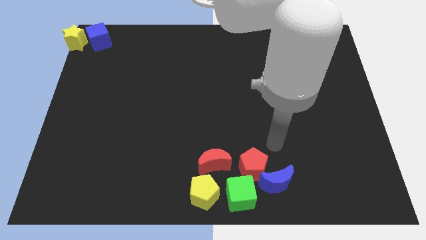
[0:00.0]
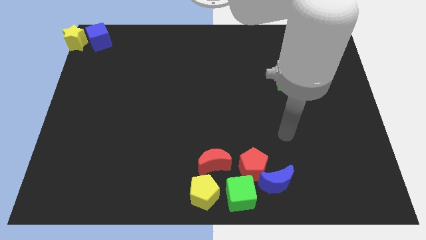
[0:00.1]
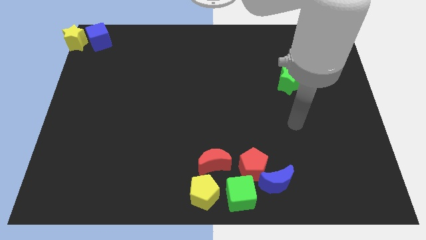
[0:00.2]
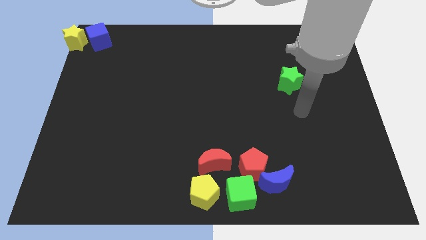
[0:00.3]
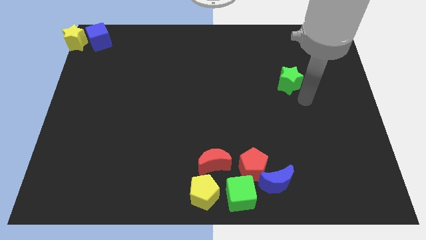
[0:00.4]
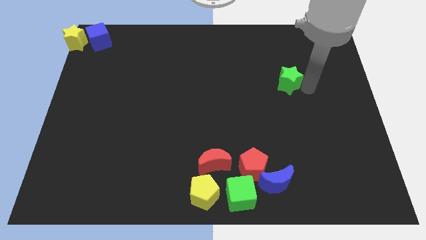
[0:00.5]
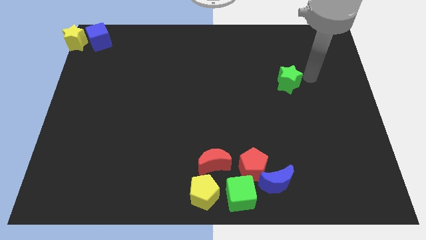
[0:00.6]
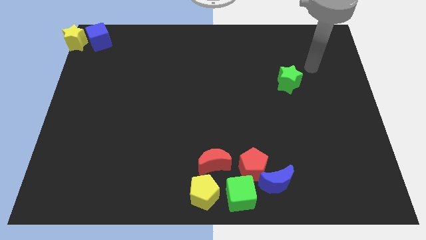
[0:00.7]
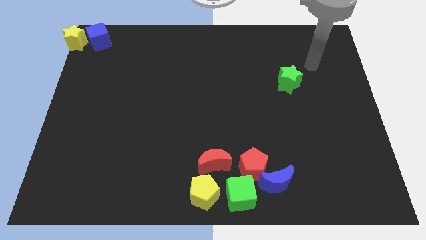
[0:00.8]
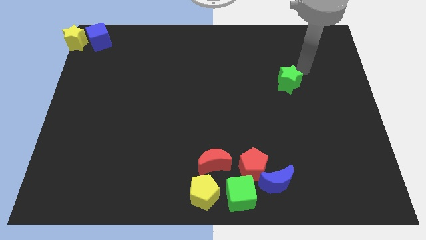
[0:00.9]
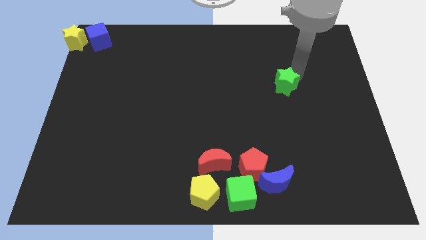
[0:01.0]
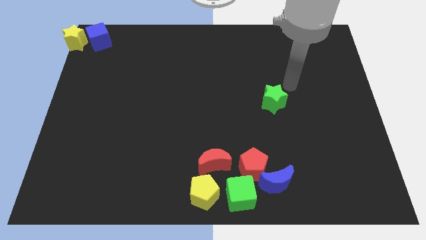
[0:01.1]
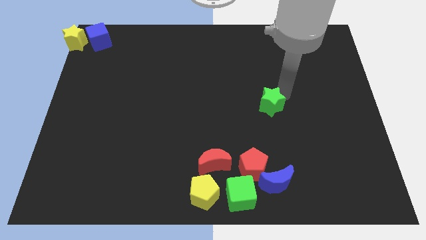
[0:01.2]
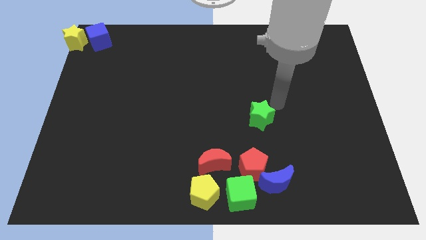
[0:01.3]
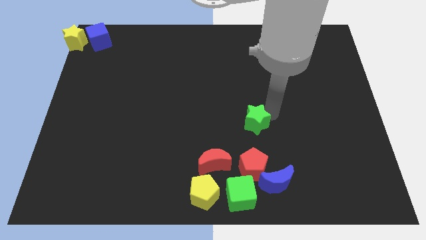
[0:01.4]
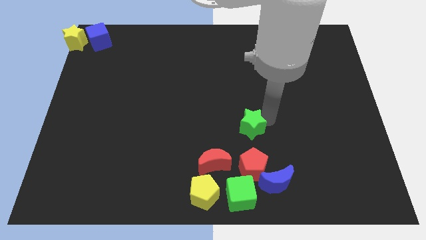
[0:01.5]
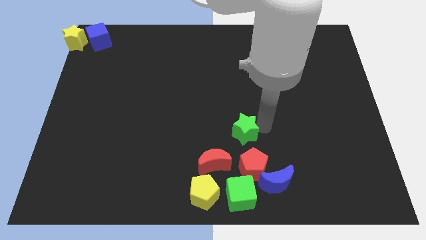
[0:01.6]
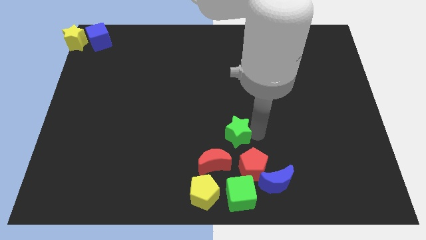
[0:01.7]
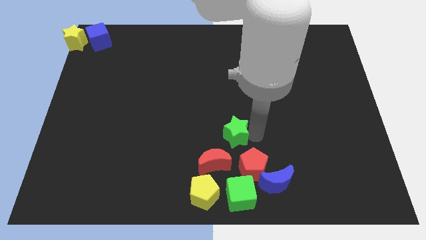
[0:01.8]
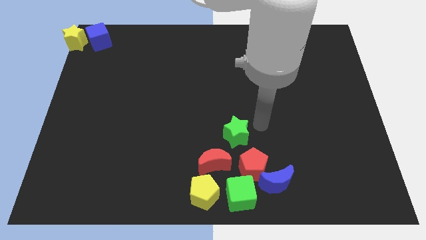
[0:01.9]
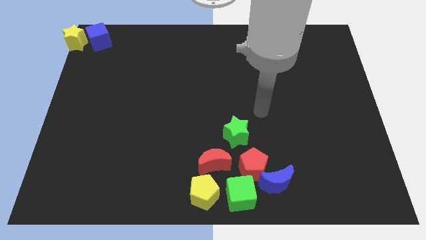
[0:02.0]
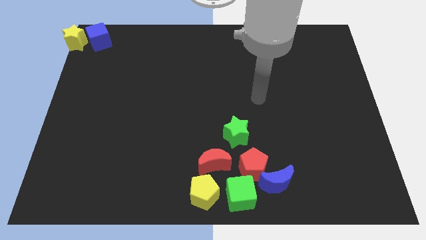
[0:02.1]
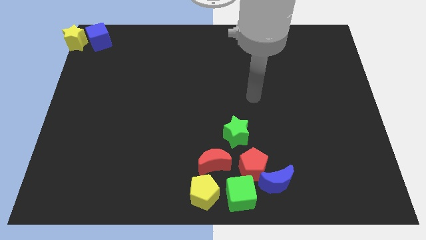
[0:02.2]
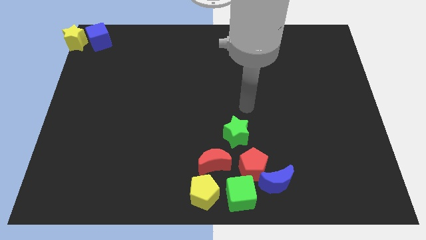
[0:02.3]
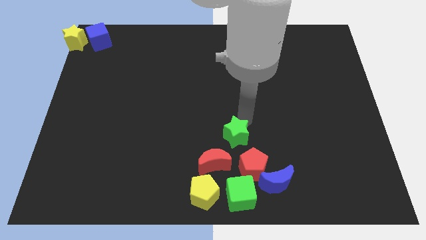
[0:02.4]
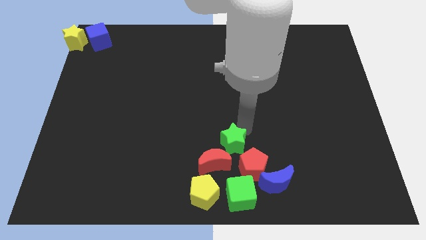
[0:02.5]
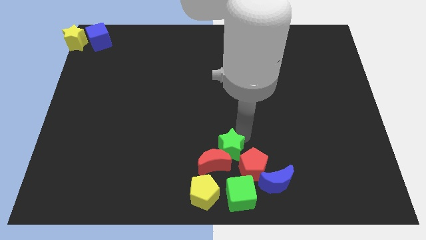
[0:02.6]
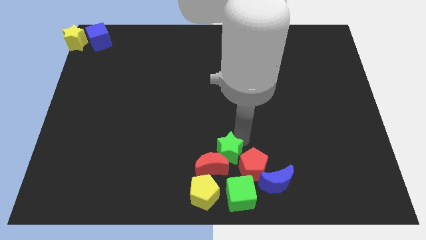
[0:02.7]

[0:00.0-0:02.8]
put the green star to the top right corner of the red crescent

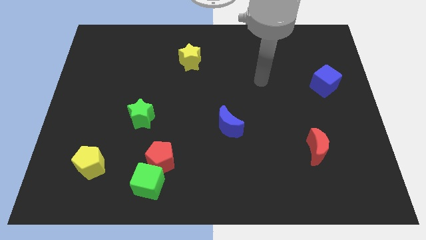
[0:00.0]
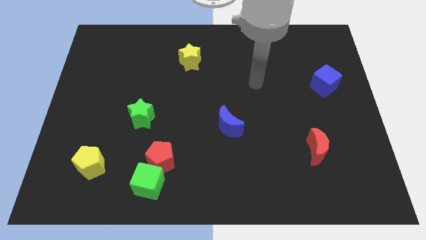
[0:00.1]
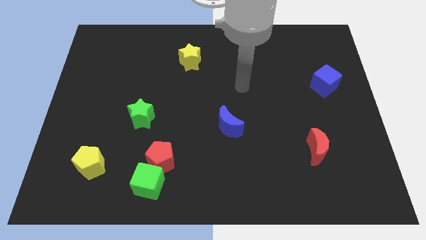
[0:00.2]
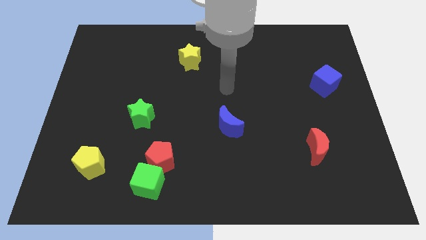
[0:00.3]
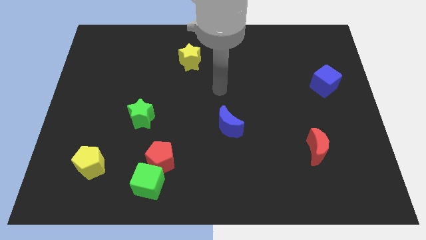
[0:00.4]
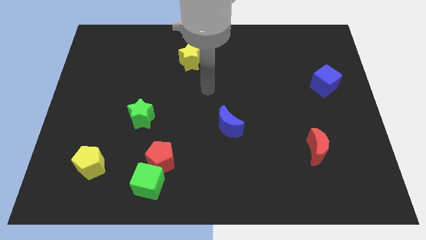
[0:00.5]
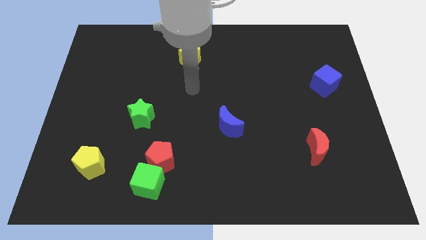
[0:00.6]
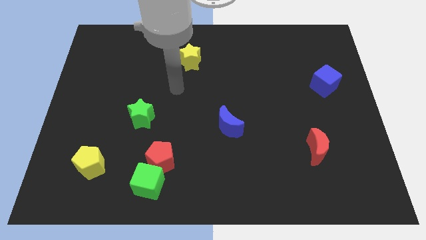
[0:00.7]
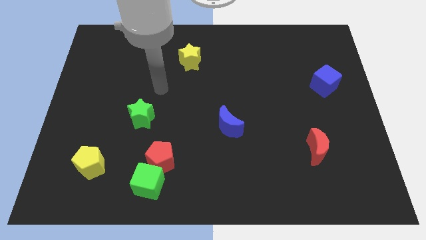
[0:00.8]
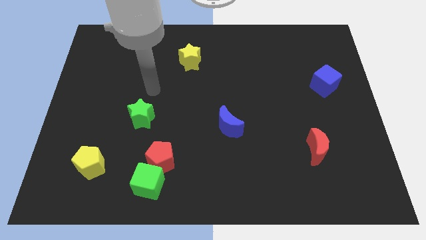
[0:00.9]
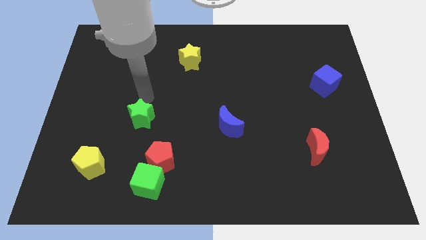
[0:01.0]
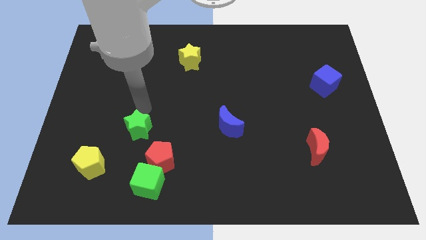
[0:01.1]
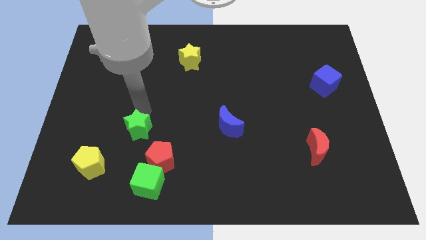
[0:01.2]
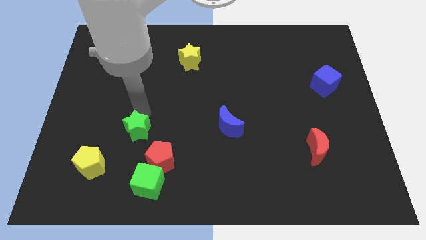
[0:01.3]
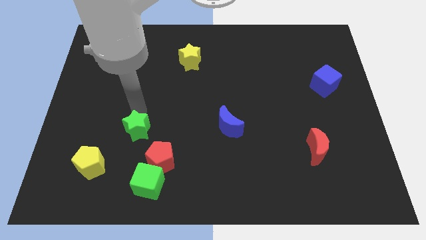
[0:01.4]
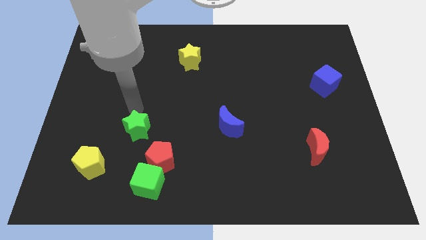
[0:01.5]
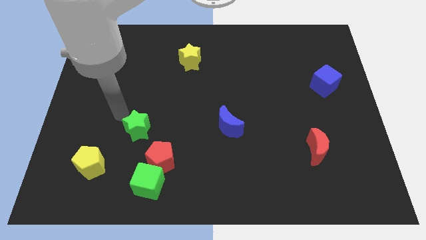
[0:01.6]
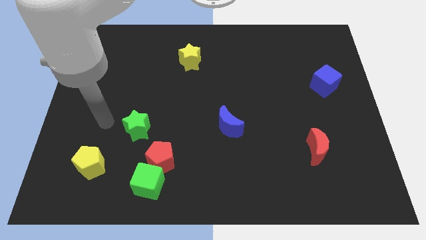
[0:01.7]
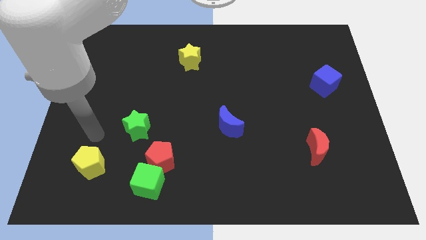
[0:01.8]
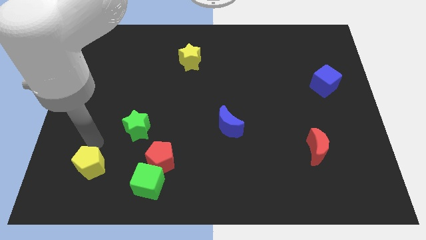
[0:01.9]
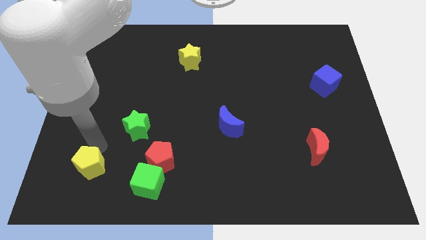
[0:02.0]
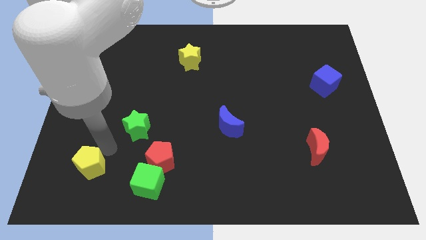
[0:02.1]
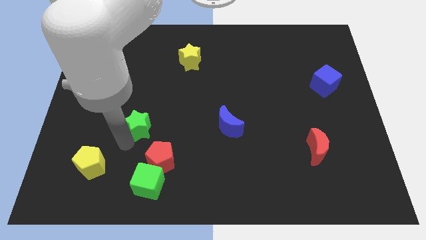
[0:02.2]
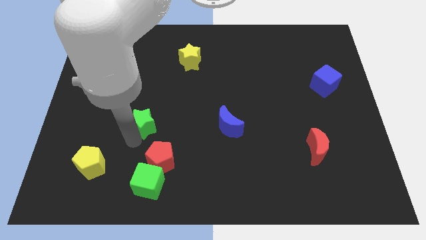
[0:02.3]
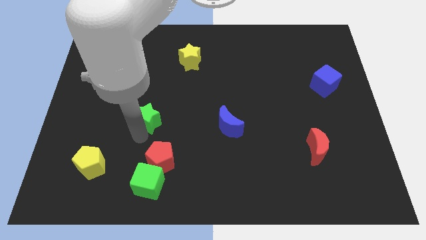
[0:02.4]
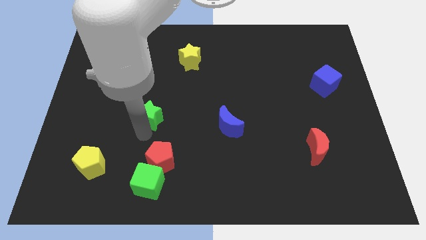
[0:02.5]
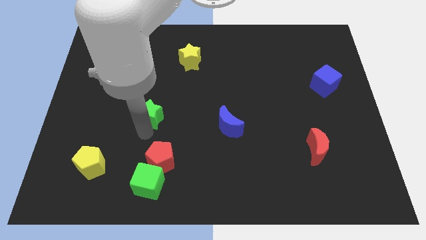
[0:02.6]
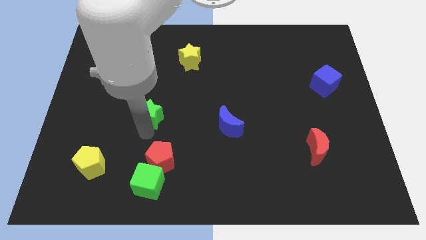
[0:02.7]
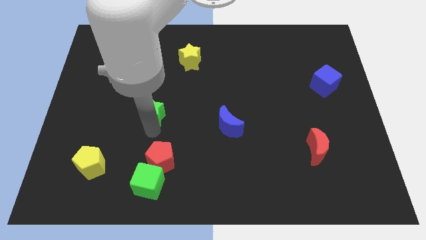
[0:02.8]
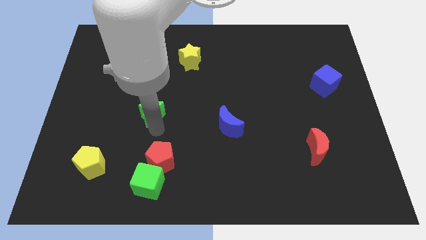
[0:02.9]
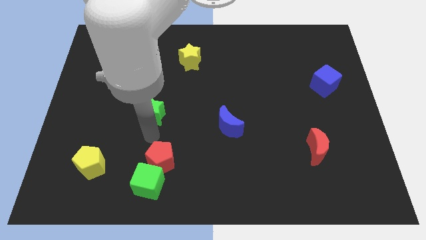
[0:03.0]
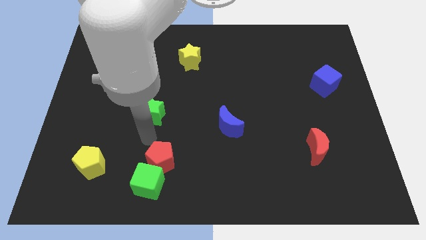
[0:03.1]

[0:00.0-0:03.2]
move green star slightly up

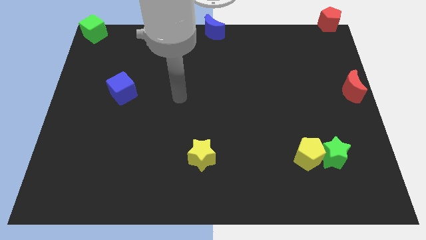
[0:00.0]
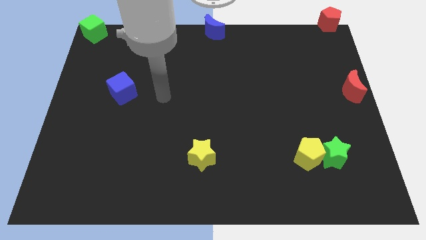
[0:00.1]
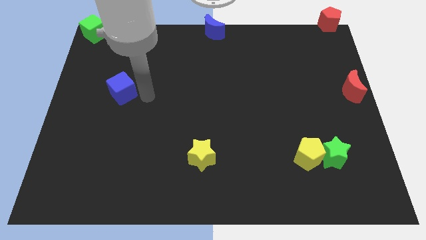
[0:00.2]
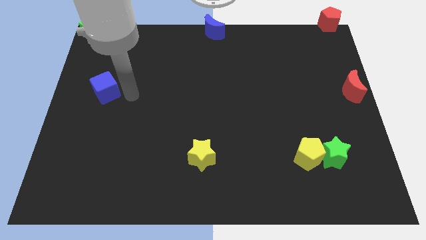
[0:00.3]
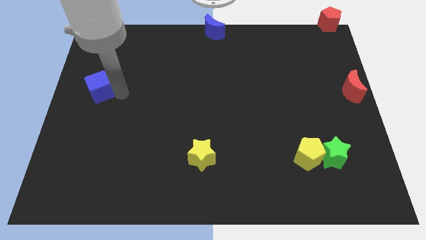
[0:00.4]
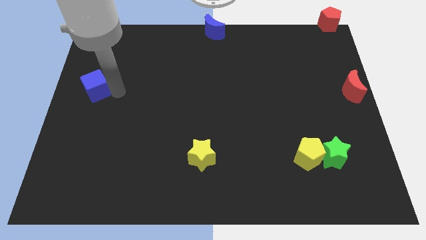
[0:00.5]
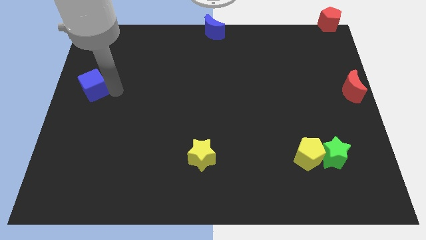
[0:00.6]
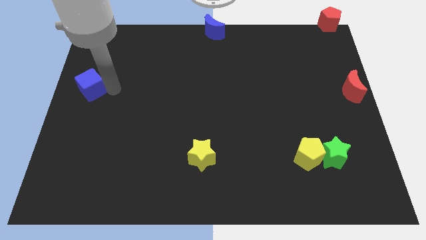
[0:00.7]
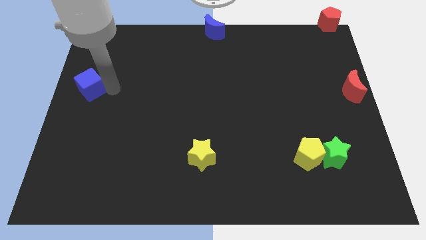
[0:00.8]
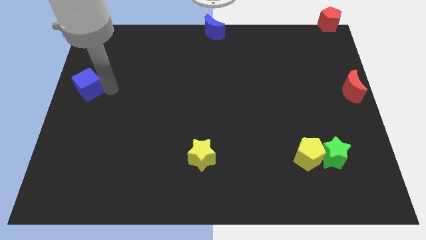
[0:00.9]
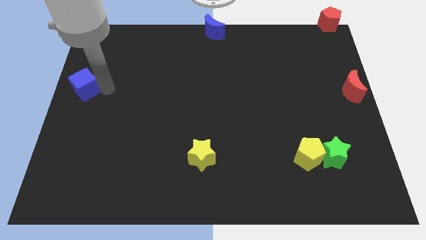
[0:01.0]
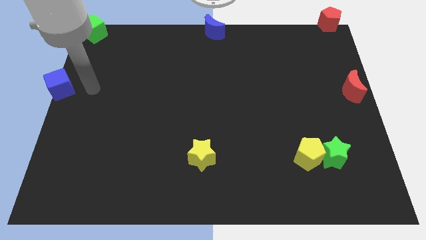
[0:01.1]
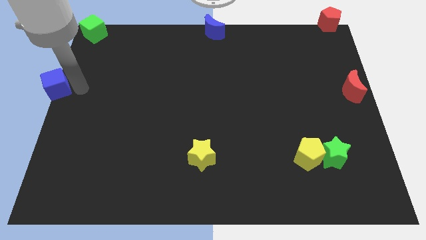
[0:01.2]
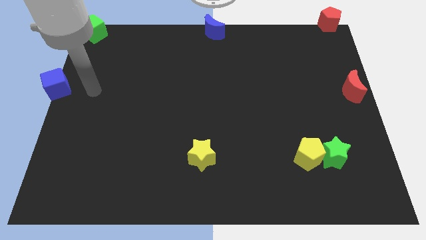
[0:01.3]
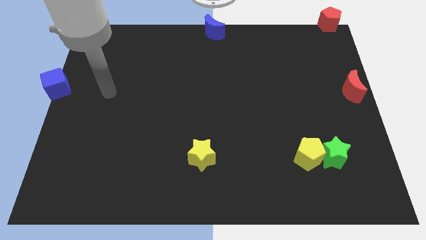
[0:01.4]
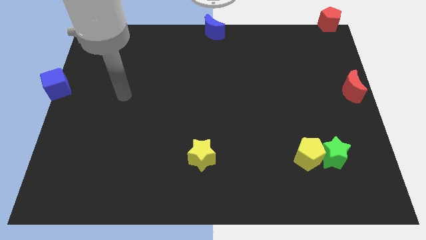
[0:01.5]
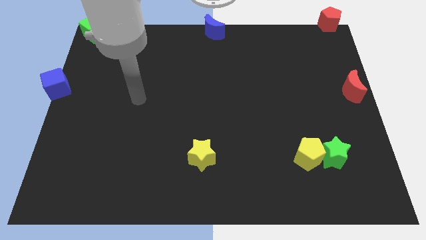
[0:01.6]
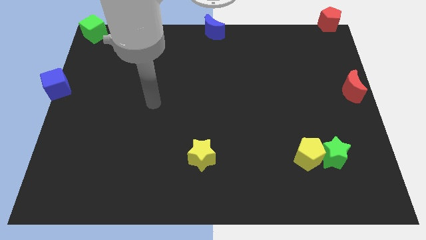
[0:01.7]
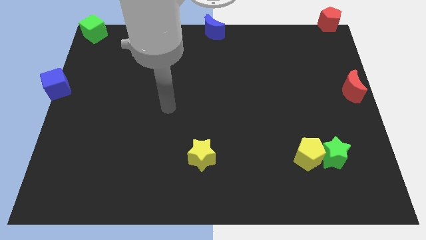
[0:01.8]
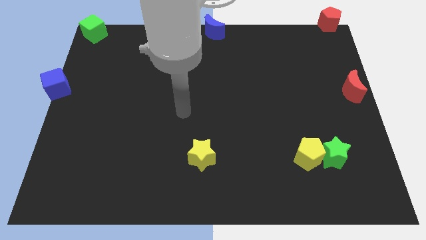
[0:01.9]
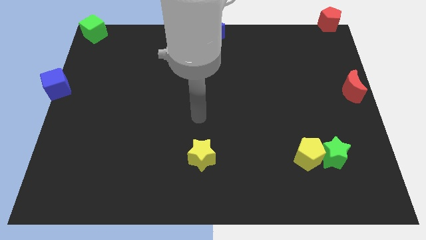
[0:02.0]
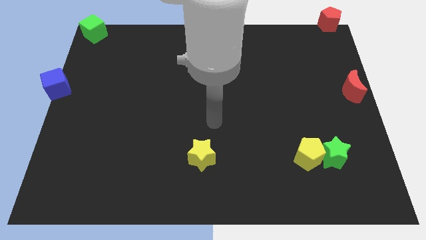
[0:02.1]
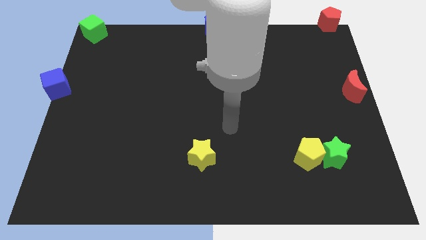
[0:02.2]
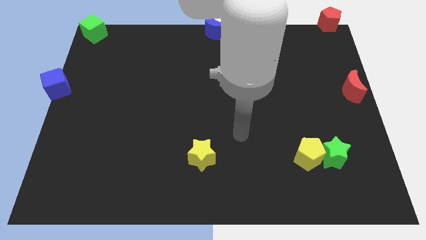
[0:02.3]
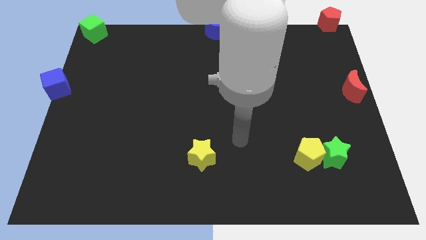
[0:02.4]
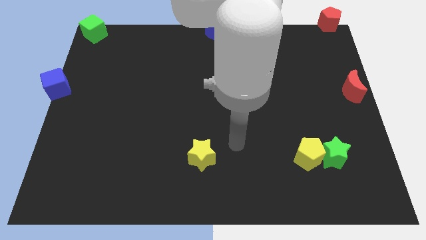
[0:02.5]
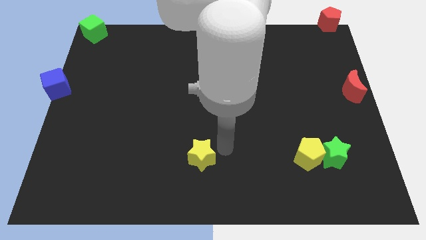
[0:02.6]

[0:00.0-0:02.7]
slide the blue cube to the center left

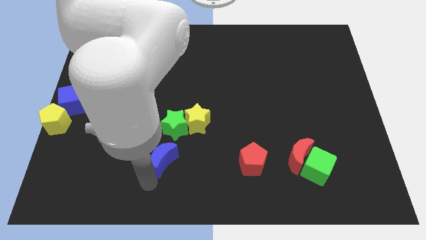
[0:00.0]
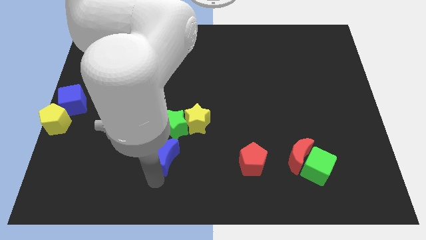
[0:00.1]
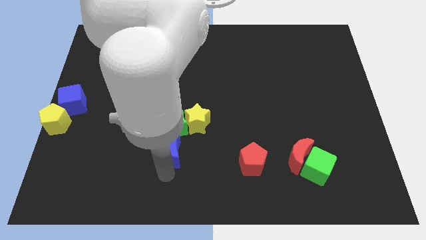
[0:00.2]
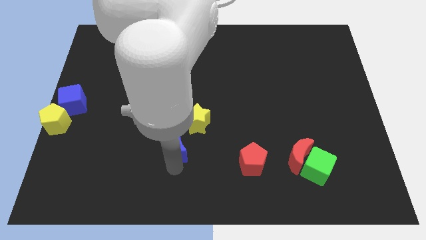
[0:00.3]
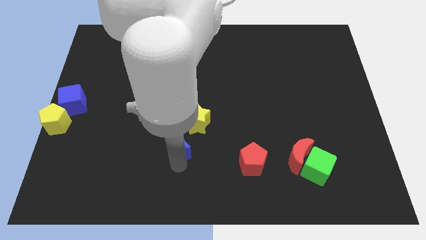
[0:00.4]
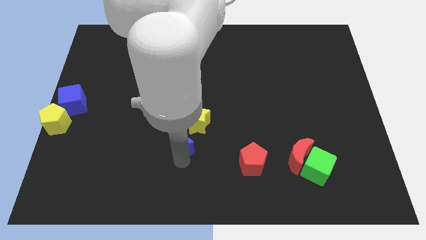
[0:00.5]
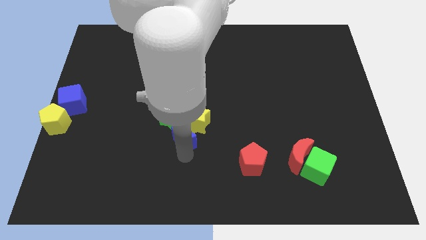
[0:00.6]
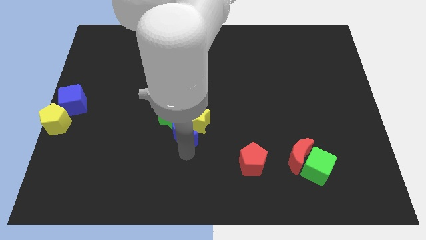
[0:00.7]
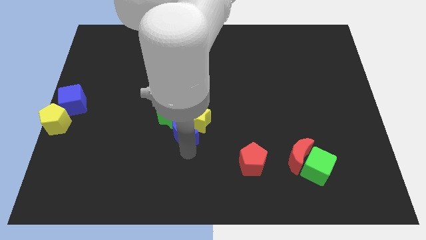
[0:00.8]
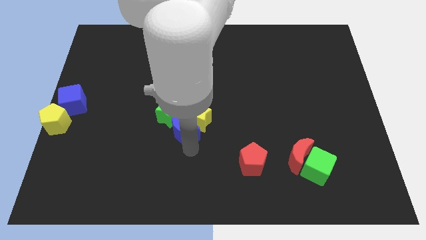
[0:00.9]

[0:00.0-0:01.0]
move the blue crescent close to the green and yellow stars
